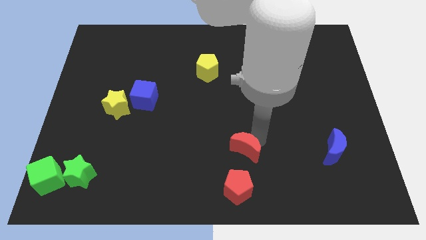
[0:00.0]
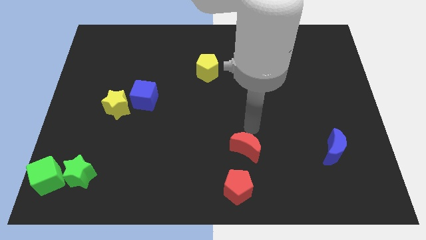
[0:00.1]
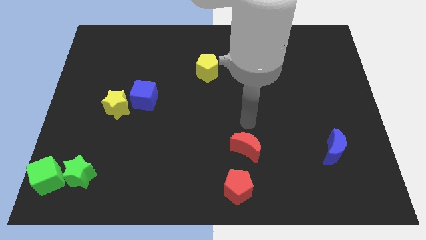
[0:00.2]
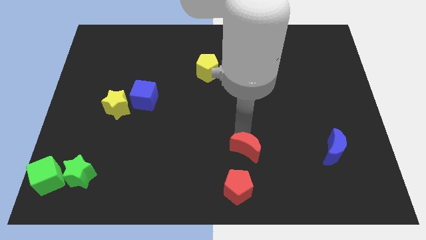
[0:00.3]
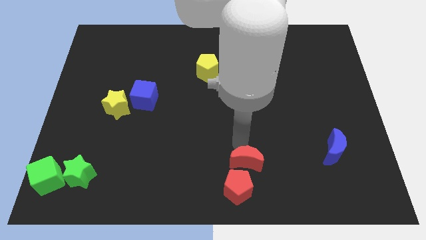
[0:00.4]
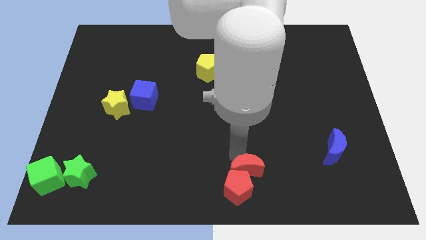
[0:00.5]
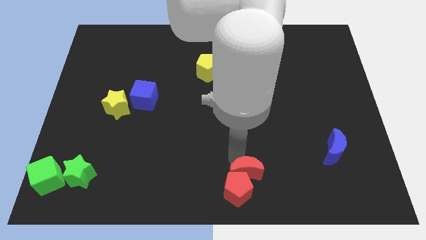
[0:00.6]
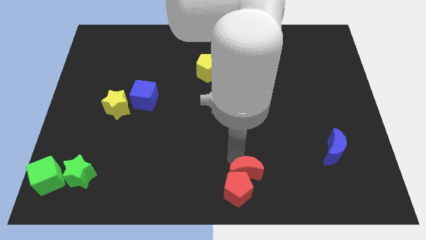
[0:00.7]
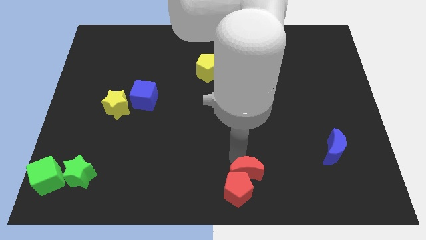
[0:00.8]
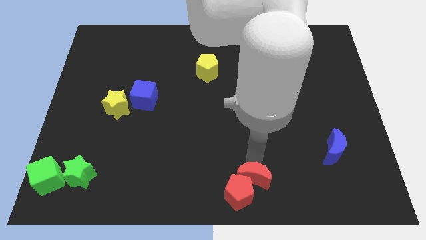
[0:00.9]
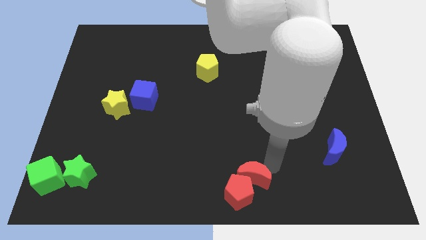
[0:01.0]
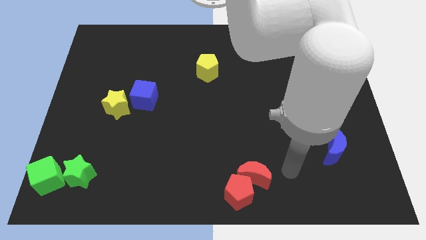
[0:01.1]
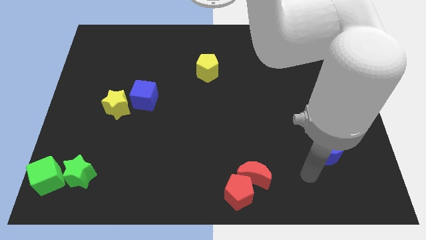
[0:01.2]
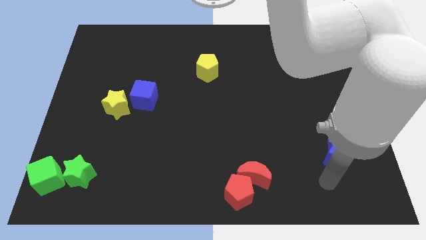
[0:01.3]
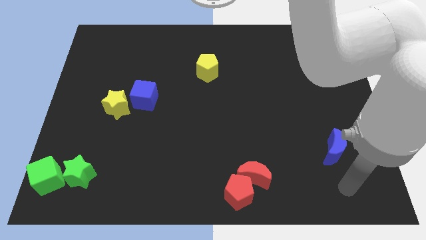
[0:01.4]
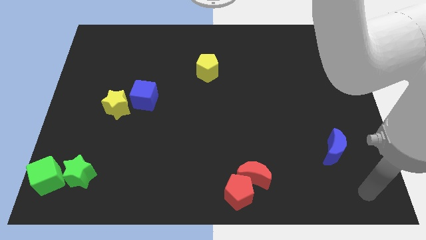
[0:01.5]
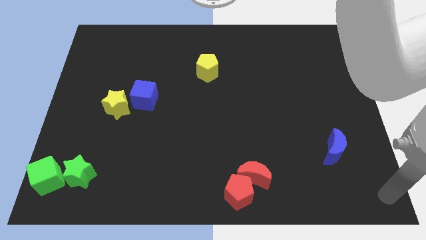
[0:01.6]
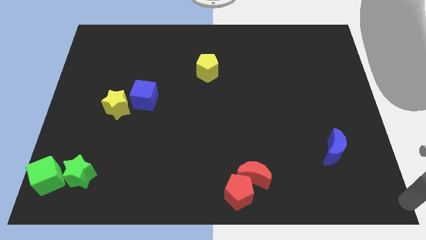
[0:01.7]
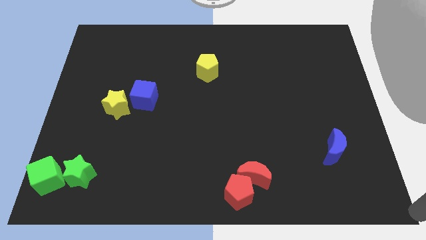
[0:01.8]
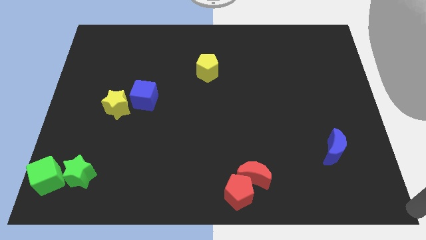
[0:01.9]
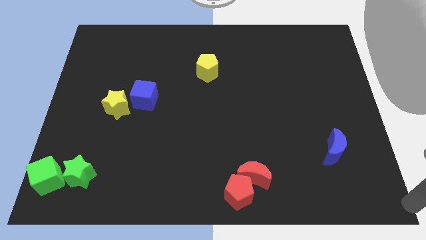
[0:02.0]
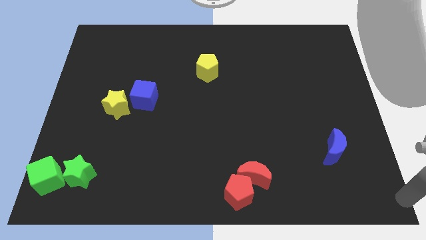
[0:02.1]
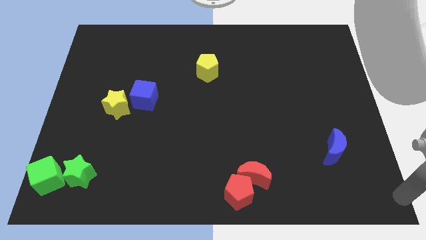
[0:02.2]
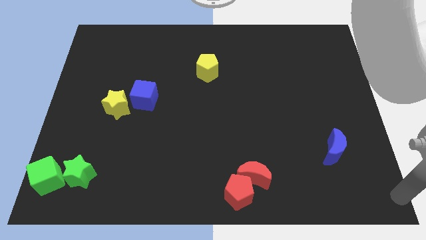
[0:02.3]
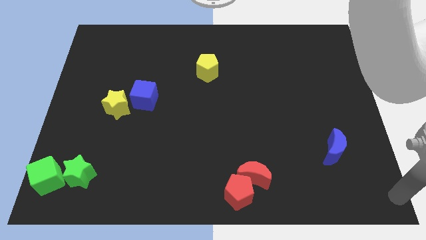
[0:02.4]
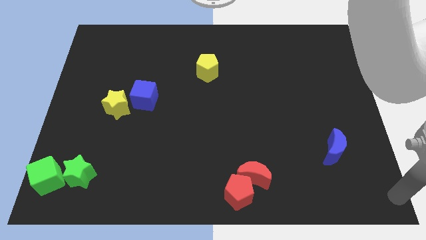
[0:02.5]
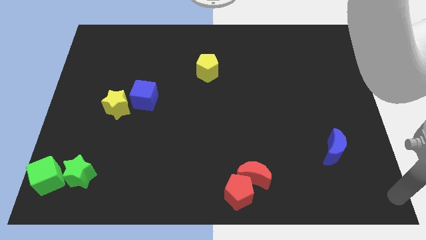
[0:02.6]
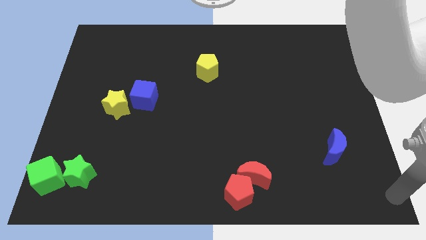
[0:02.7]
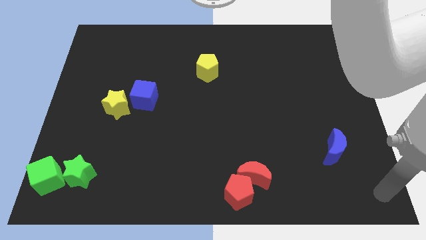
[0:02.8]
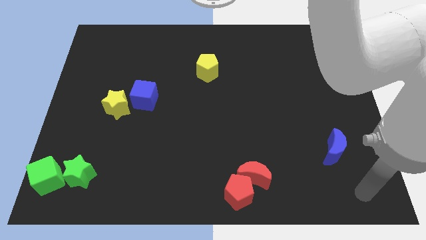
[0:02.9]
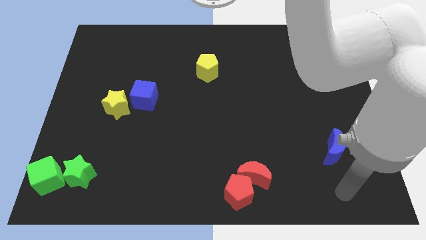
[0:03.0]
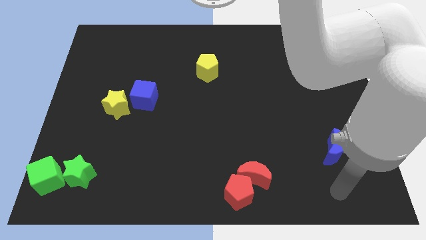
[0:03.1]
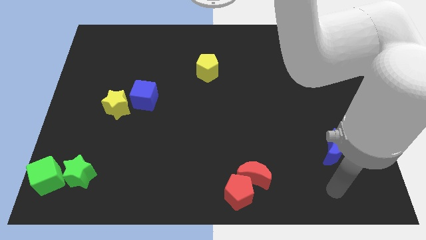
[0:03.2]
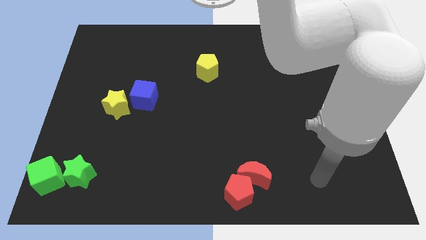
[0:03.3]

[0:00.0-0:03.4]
place the red crescent at the top of the red pentagon

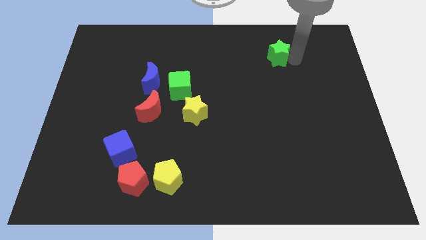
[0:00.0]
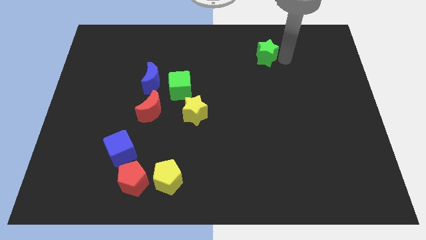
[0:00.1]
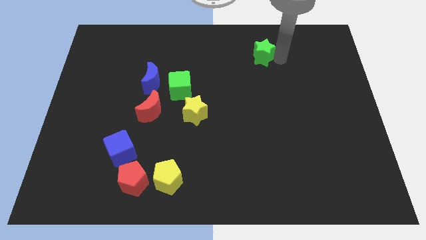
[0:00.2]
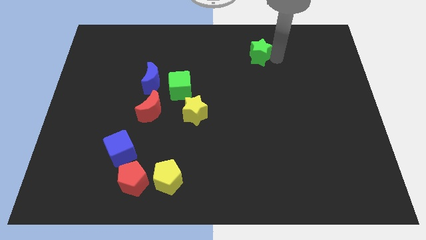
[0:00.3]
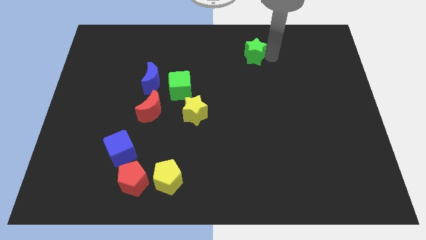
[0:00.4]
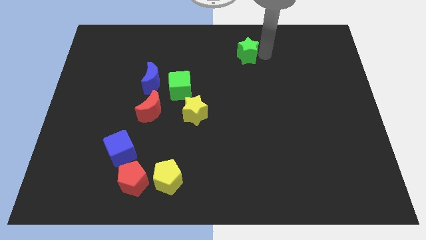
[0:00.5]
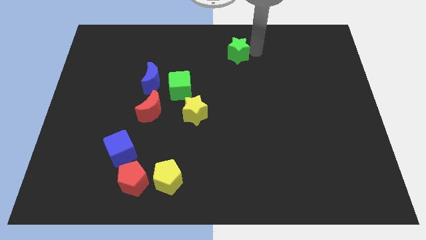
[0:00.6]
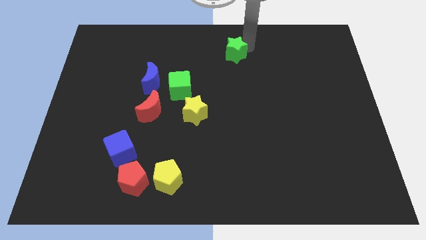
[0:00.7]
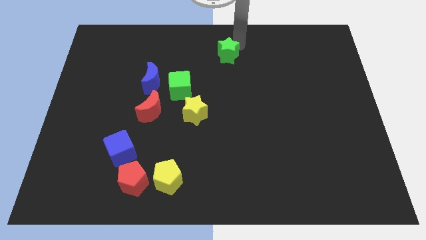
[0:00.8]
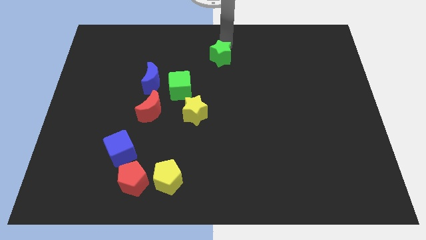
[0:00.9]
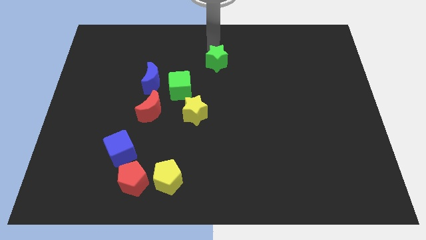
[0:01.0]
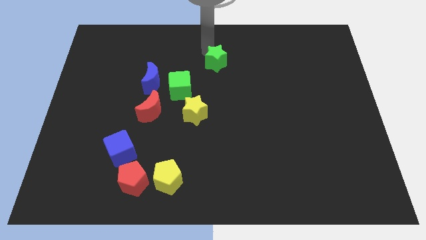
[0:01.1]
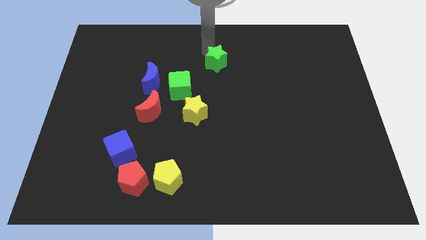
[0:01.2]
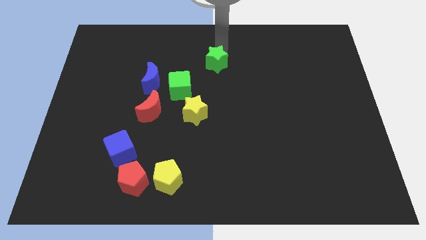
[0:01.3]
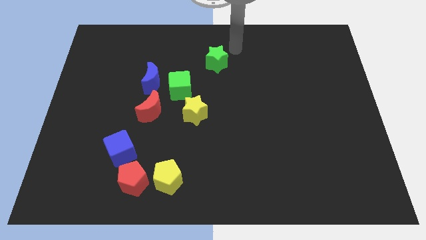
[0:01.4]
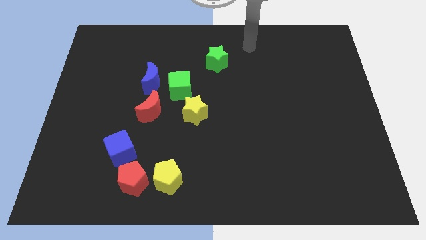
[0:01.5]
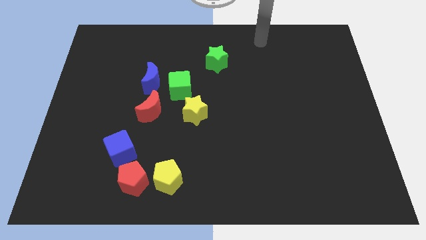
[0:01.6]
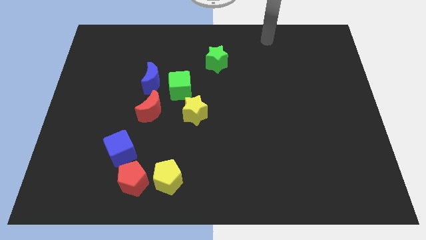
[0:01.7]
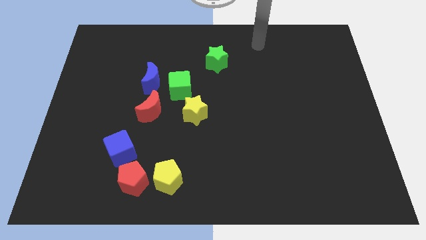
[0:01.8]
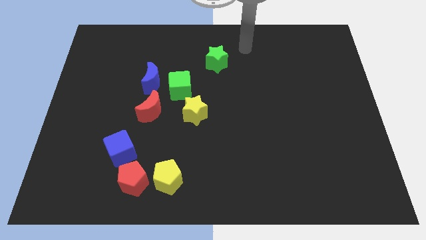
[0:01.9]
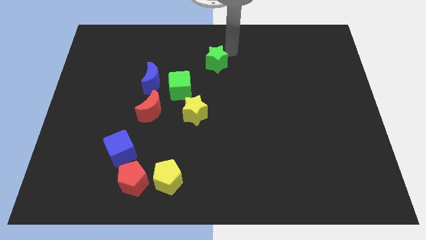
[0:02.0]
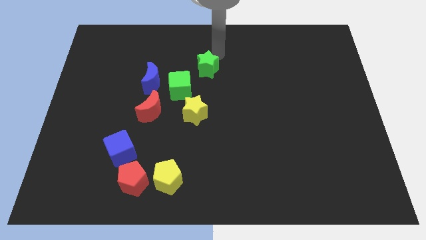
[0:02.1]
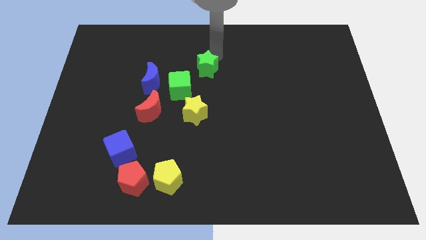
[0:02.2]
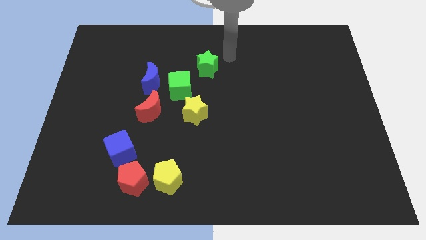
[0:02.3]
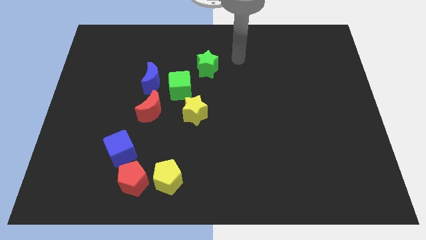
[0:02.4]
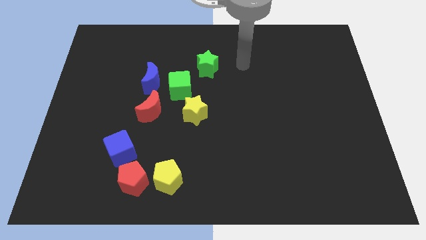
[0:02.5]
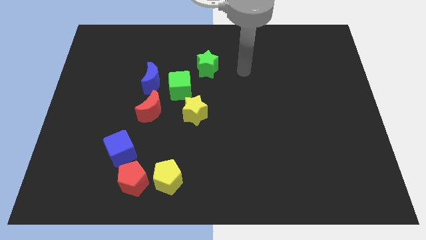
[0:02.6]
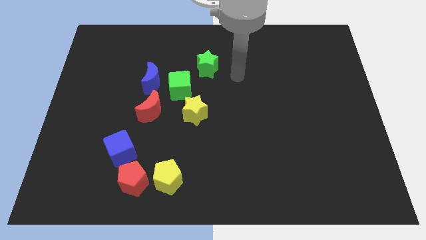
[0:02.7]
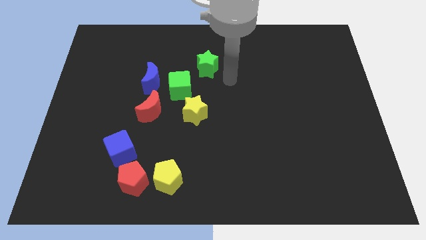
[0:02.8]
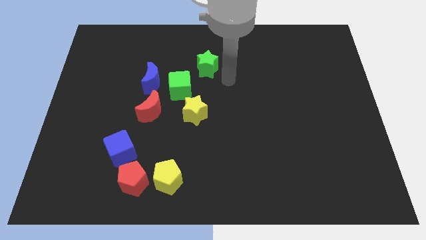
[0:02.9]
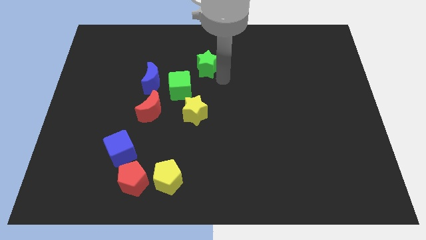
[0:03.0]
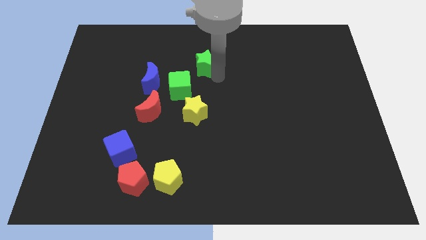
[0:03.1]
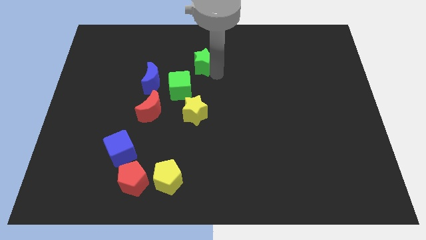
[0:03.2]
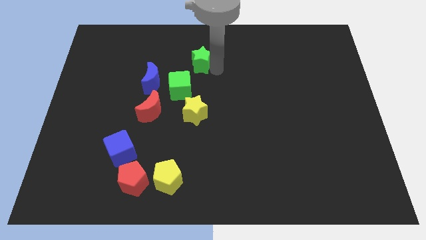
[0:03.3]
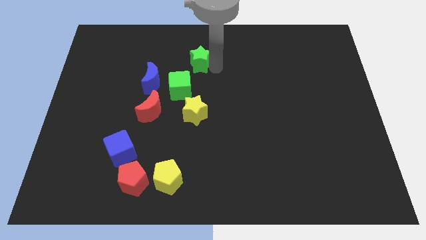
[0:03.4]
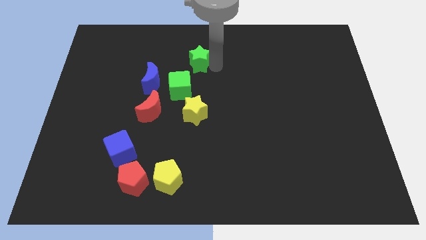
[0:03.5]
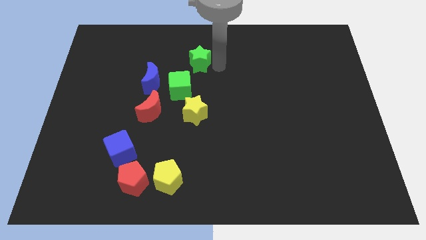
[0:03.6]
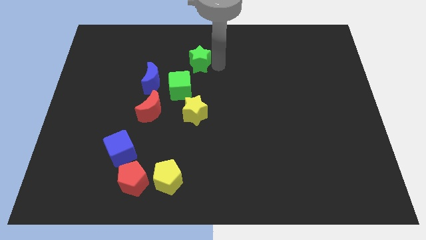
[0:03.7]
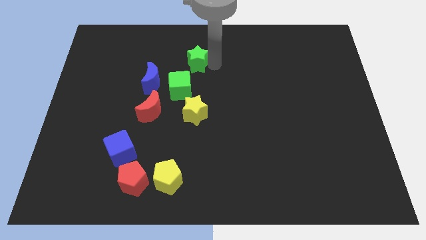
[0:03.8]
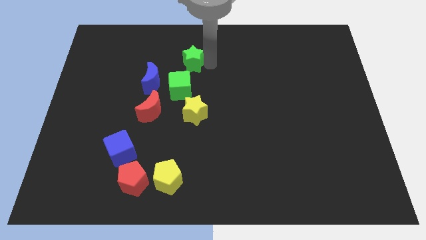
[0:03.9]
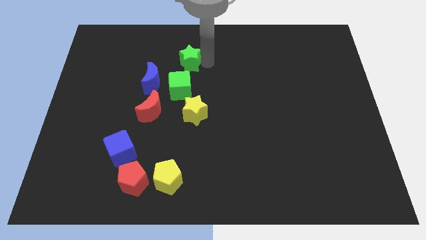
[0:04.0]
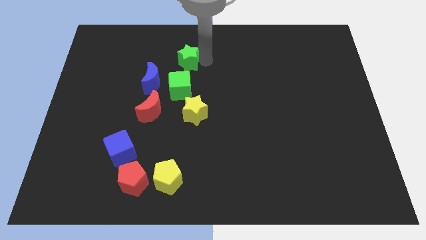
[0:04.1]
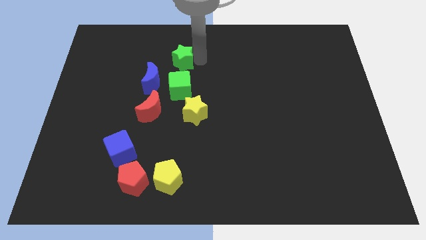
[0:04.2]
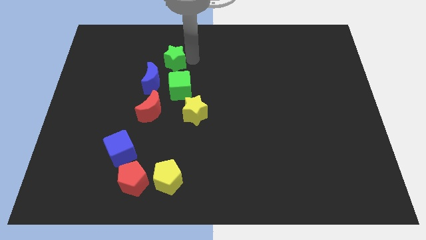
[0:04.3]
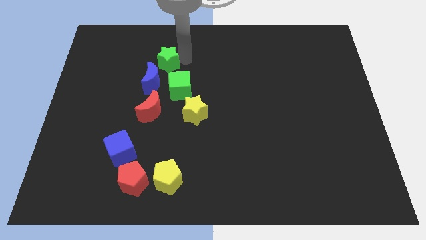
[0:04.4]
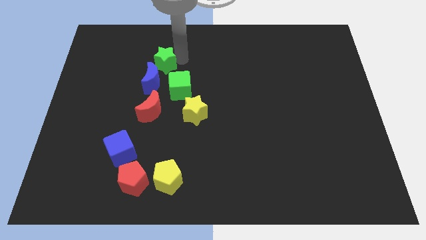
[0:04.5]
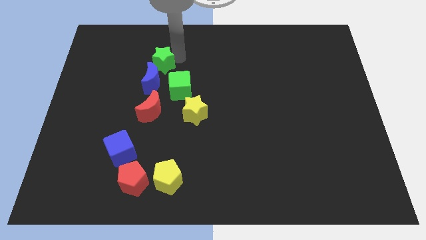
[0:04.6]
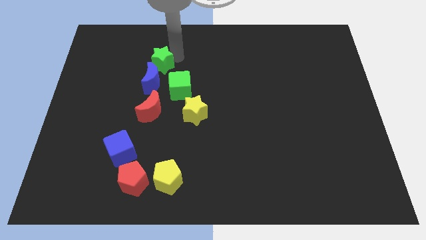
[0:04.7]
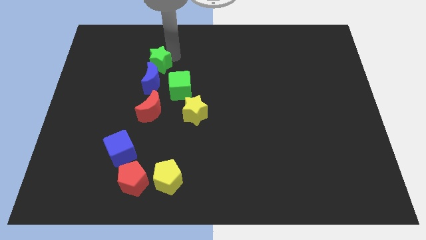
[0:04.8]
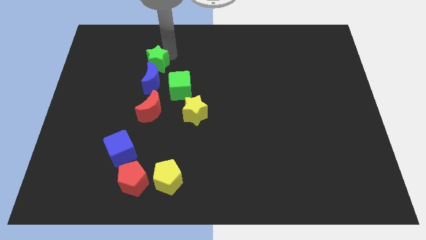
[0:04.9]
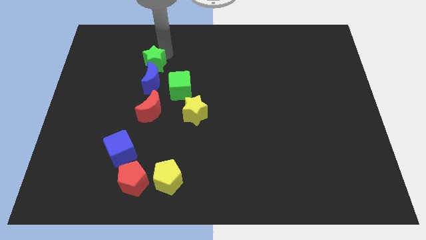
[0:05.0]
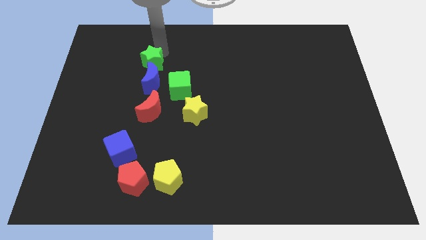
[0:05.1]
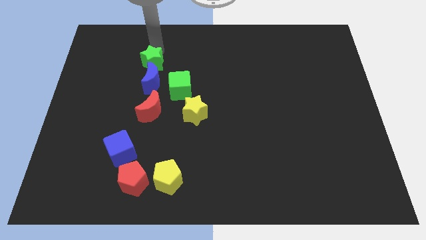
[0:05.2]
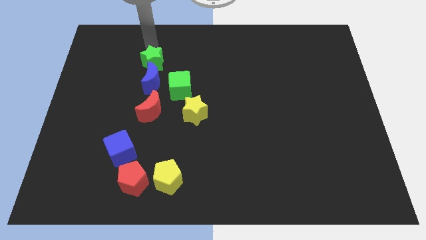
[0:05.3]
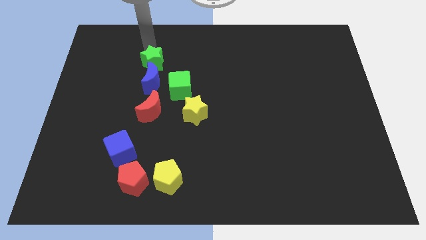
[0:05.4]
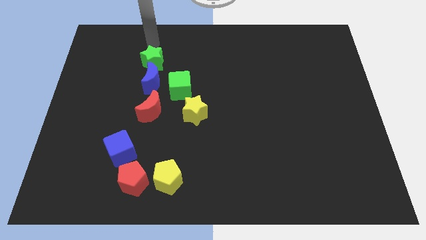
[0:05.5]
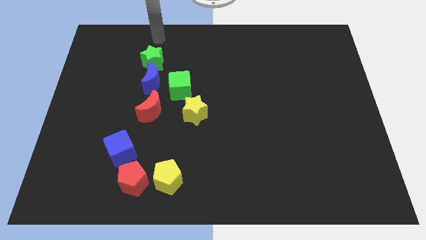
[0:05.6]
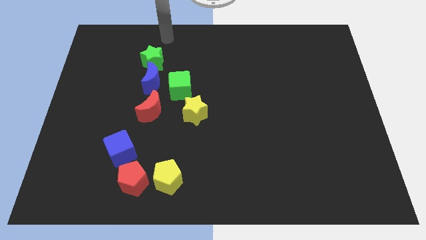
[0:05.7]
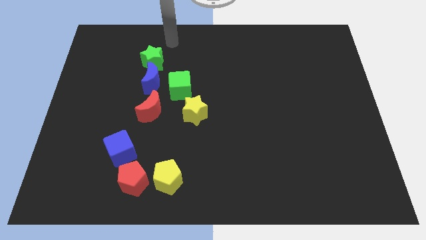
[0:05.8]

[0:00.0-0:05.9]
place the green star above the blue moon
